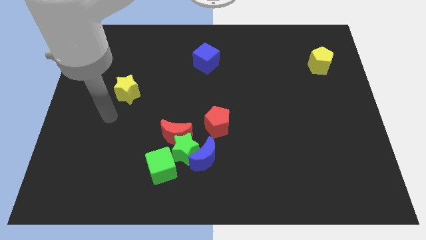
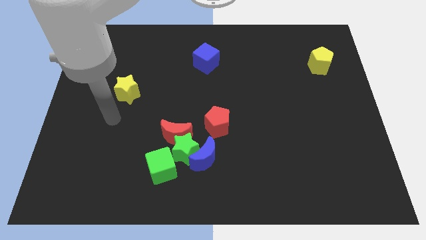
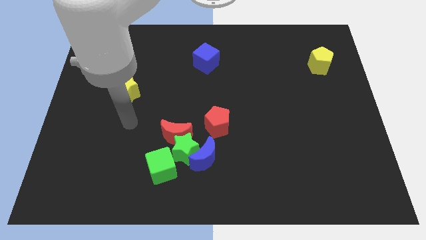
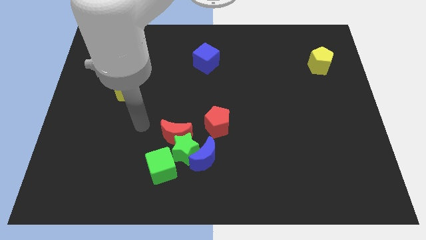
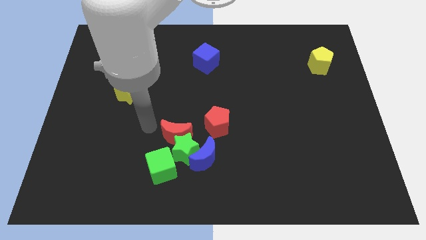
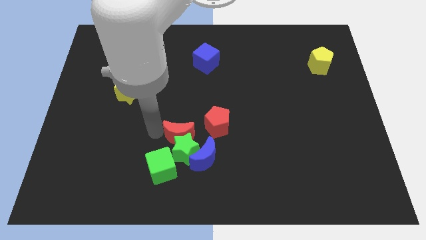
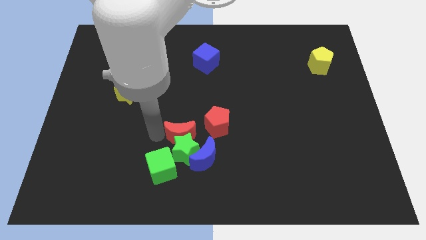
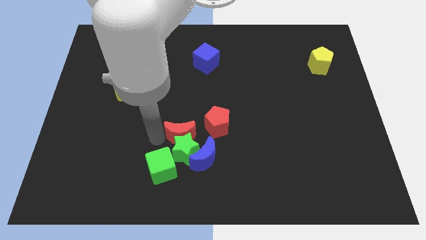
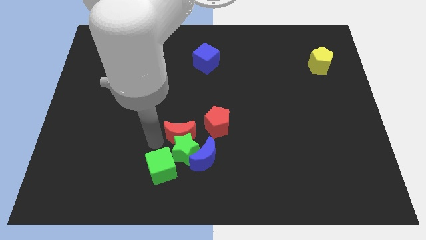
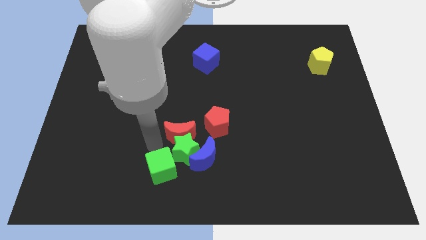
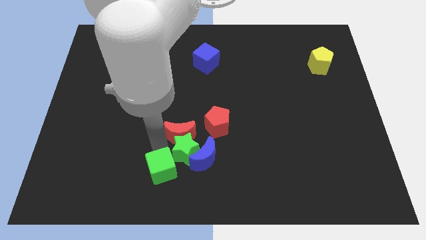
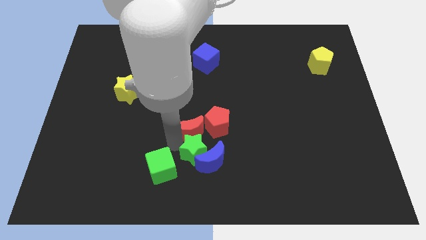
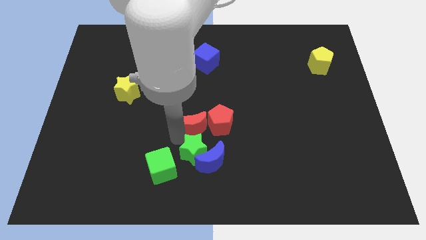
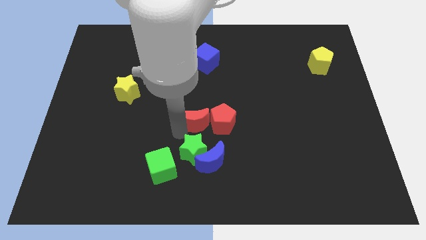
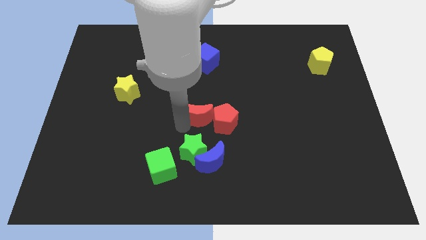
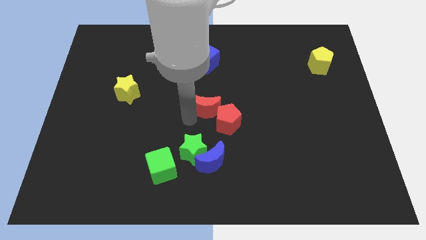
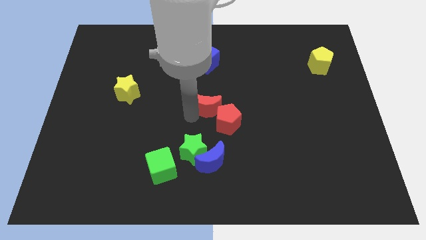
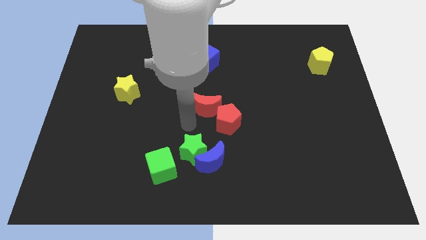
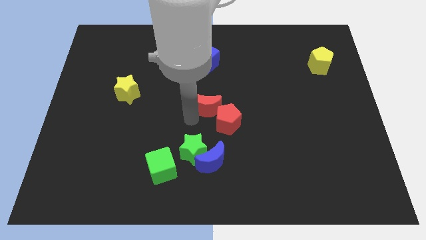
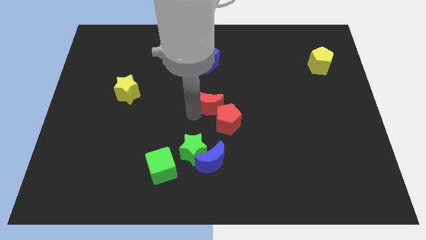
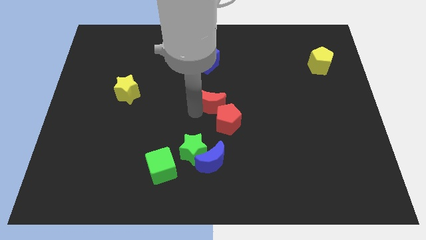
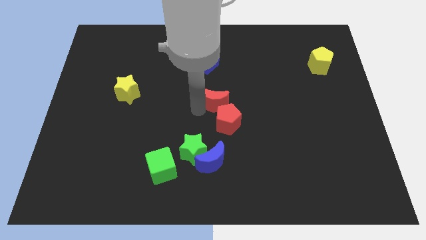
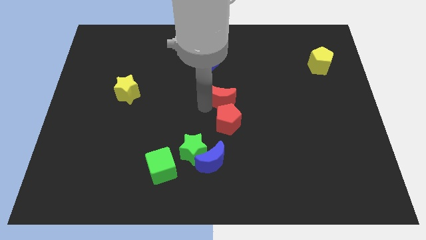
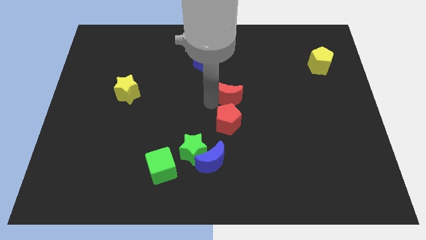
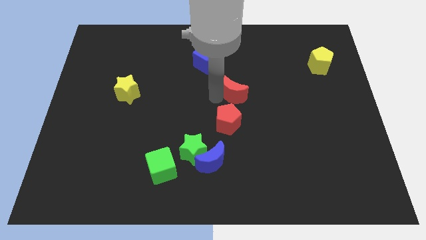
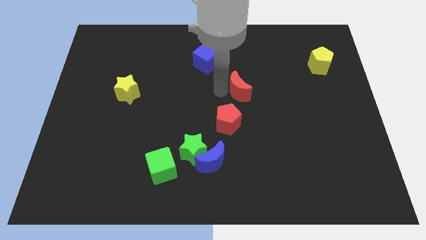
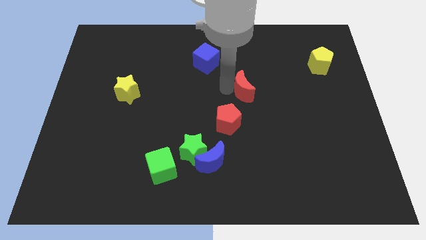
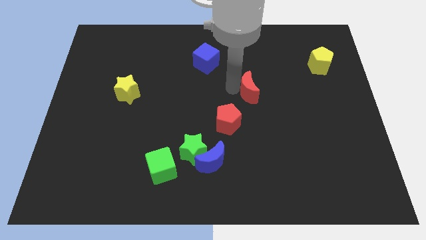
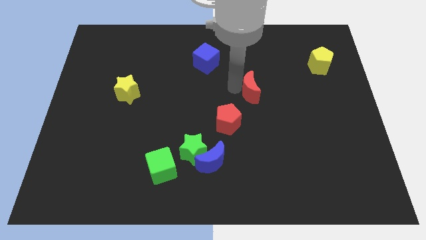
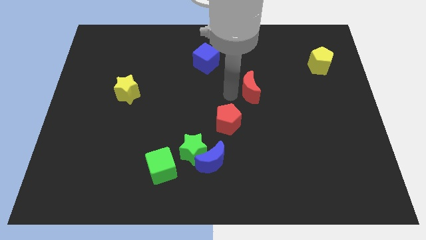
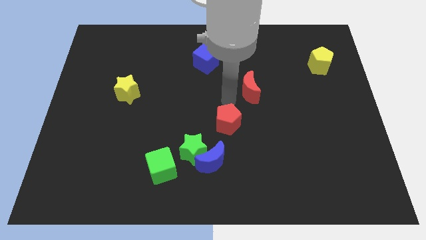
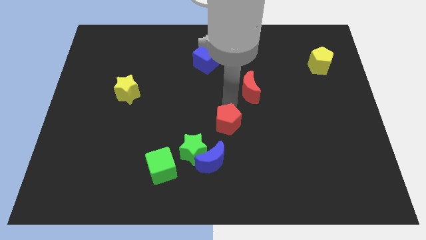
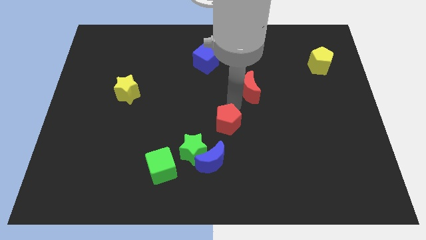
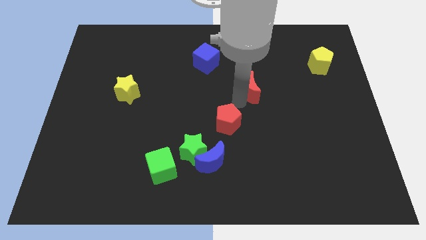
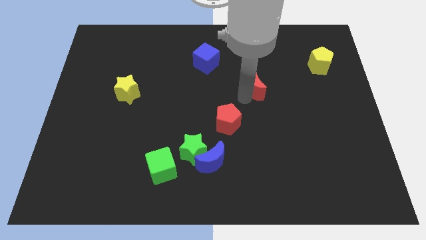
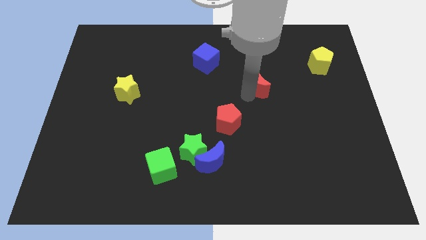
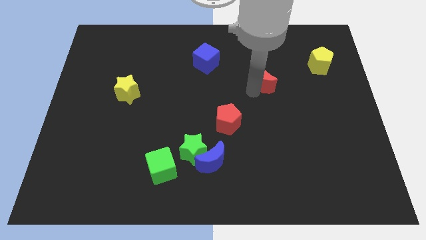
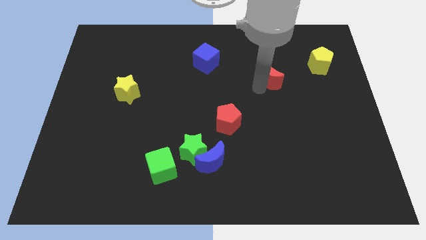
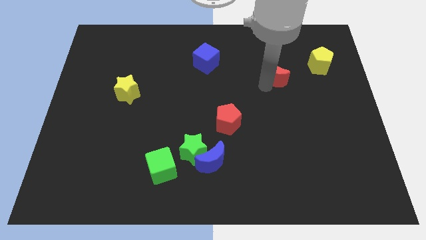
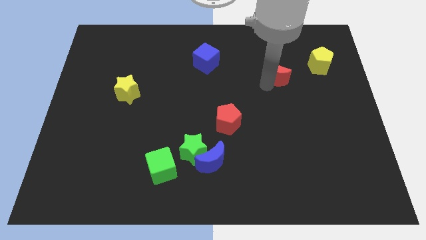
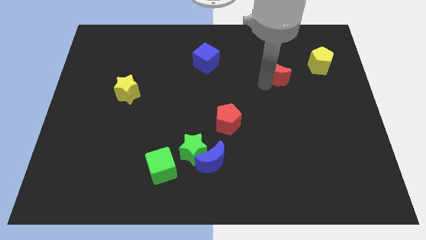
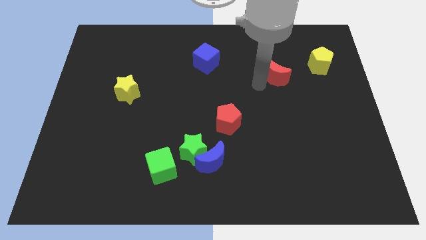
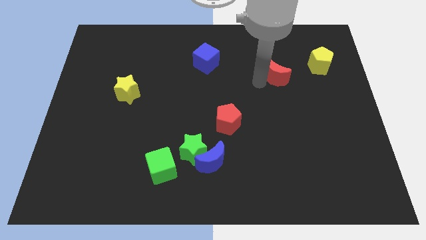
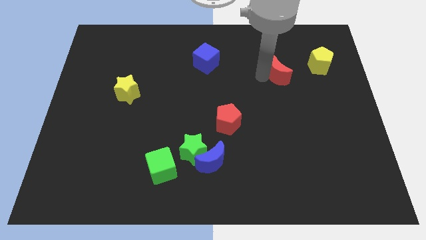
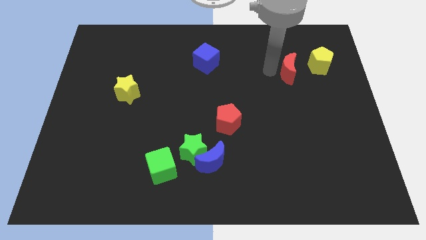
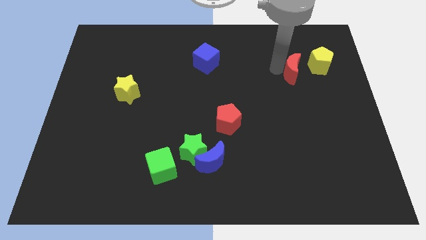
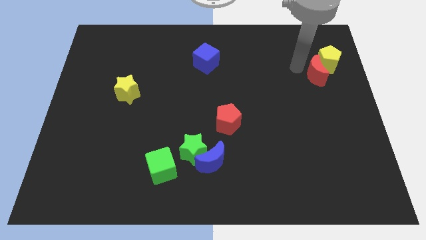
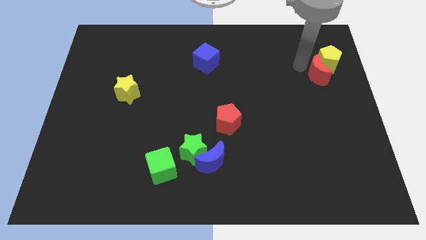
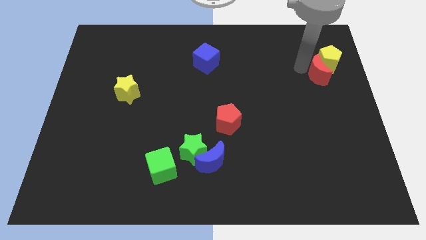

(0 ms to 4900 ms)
put the red moon to the yellow pentagon

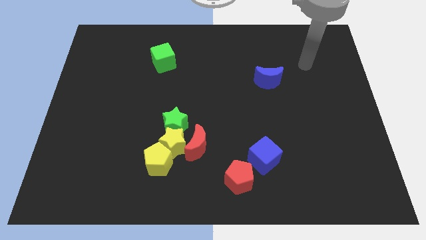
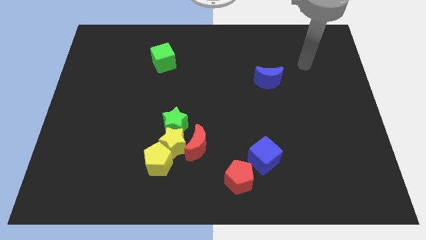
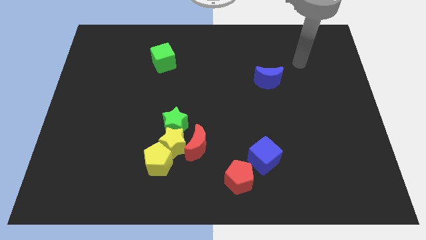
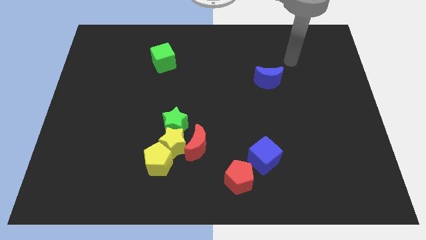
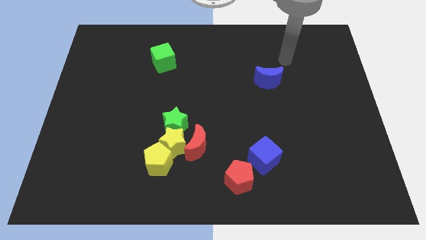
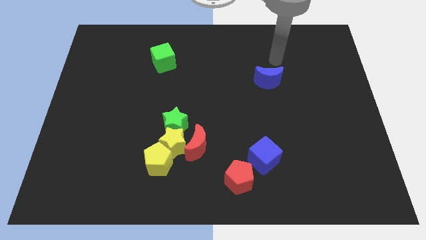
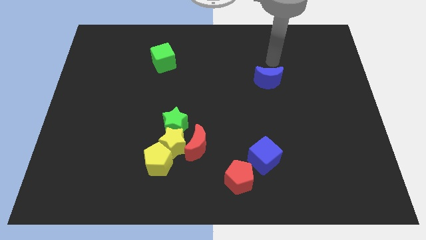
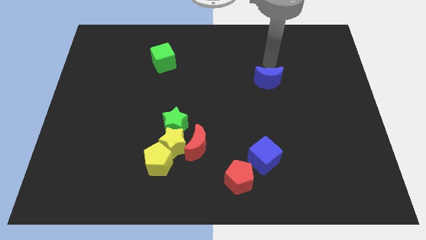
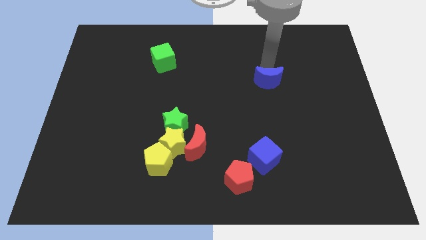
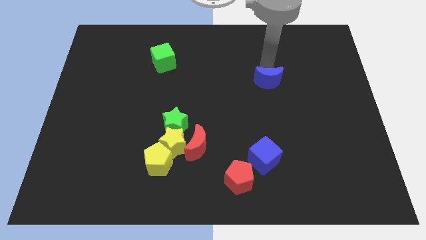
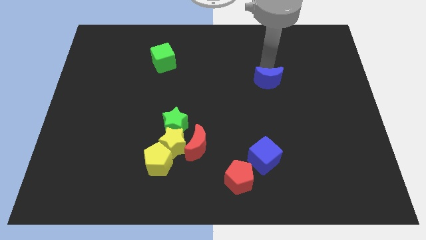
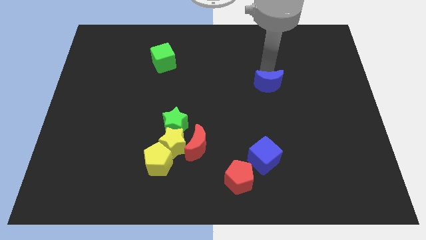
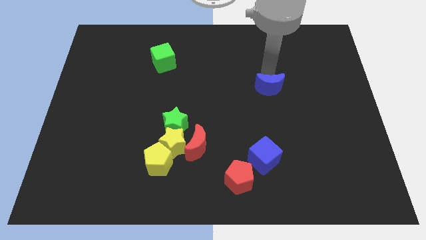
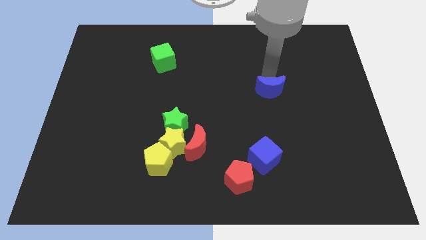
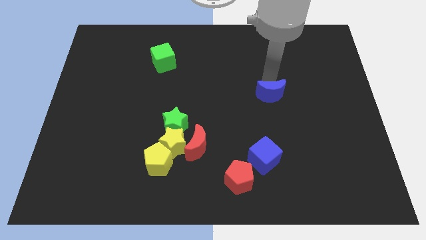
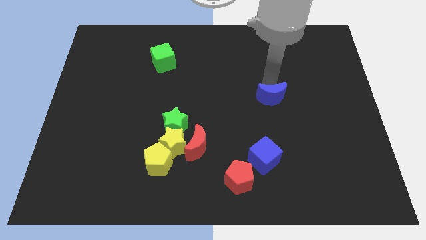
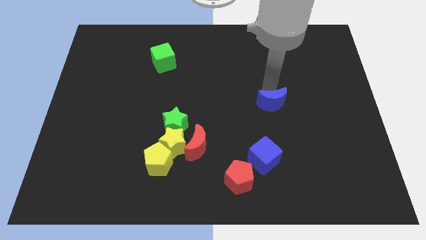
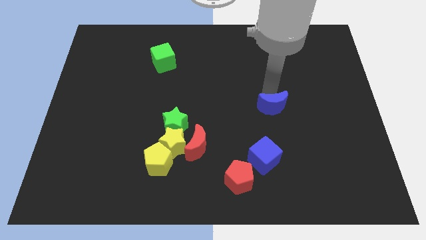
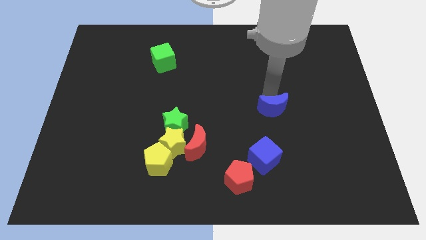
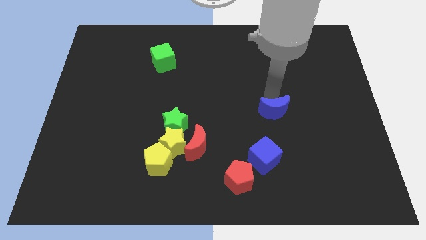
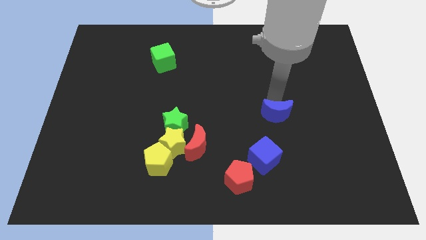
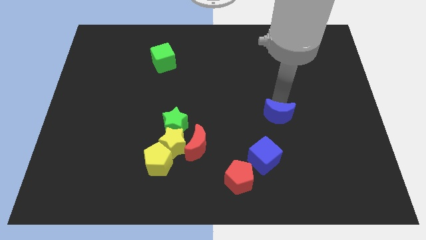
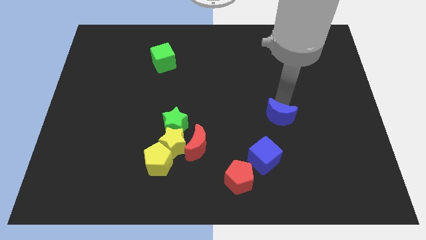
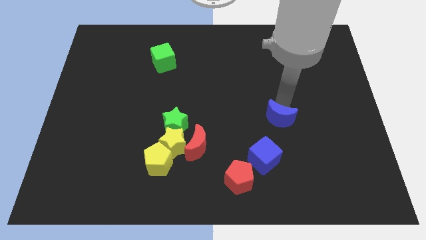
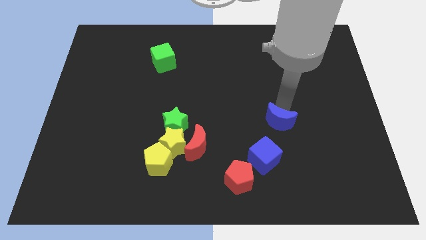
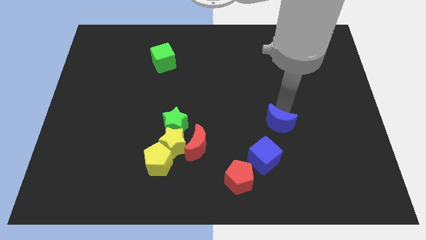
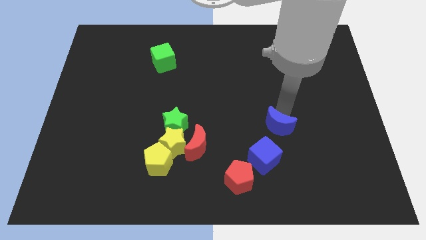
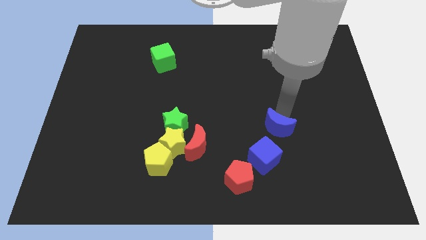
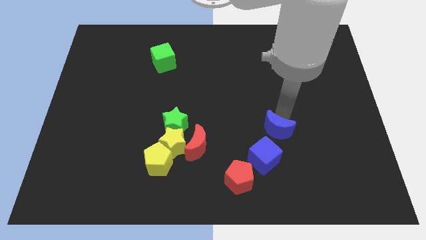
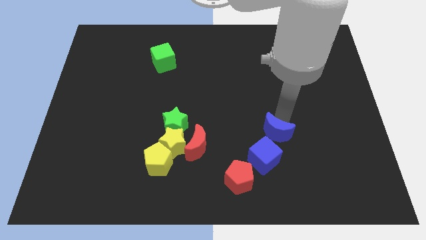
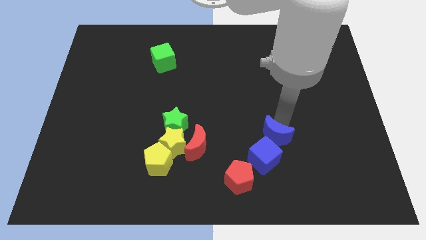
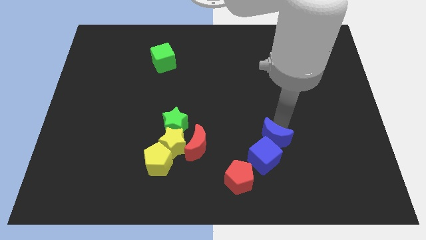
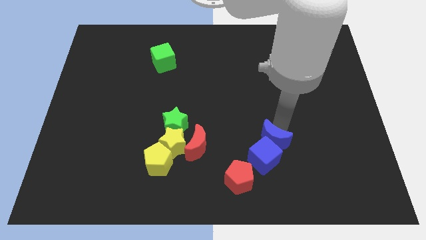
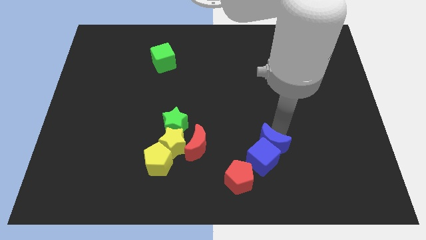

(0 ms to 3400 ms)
put the blue moon to the blue cube
